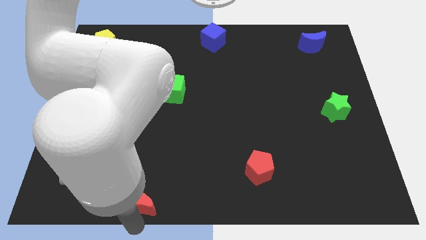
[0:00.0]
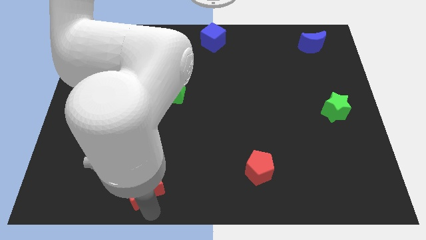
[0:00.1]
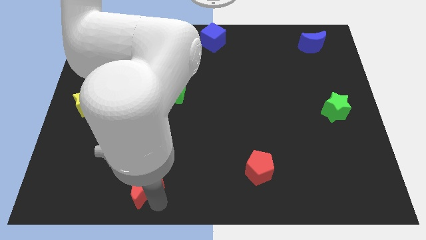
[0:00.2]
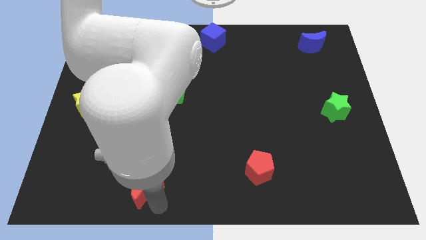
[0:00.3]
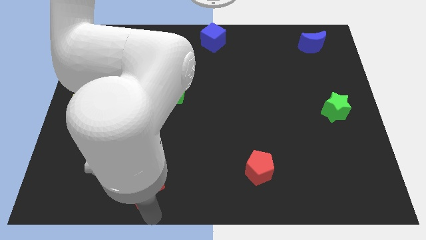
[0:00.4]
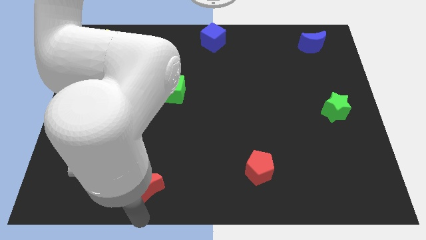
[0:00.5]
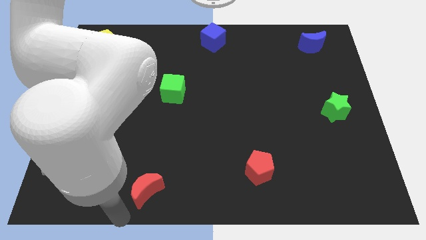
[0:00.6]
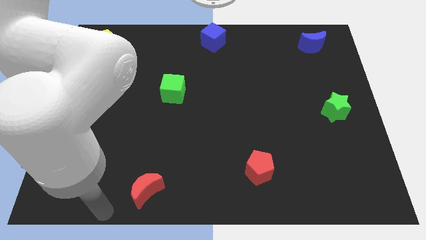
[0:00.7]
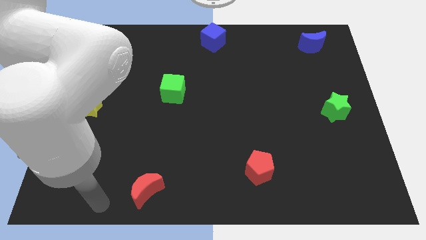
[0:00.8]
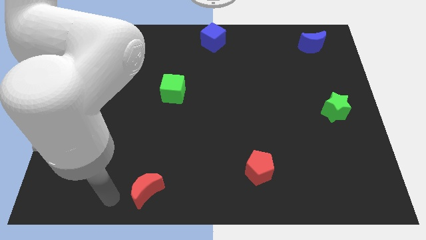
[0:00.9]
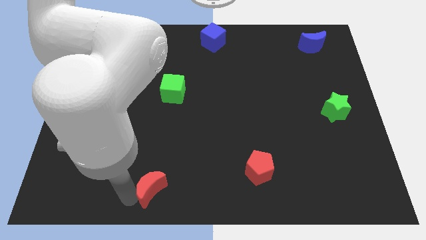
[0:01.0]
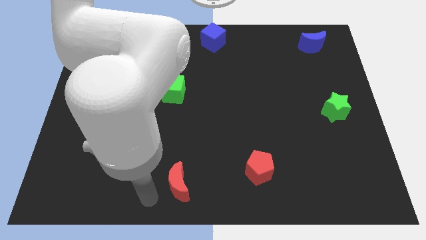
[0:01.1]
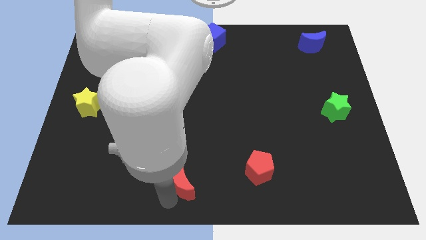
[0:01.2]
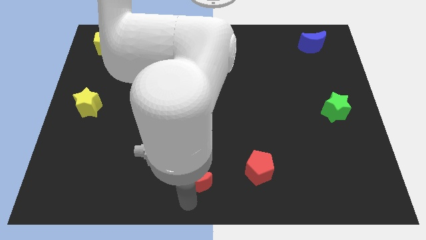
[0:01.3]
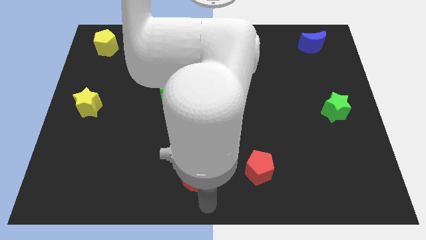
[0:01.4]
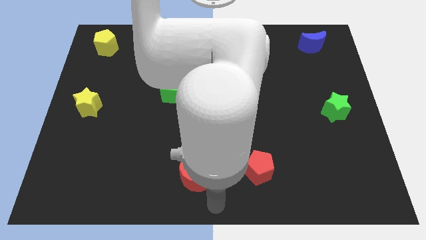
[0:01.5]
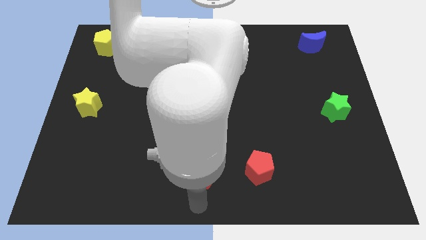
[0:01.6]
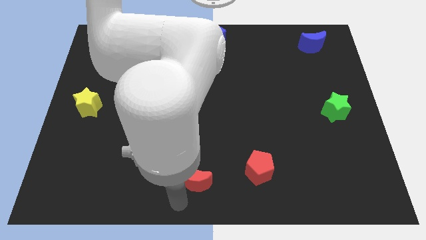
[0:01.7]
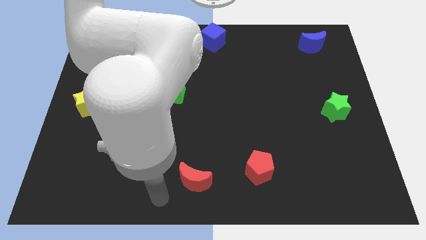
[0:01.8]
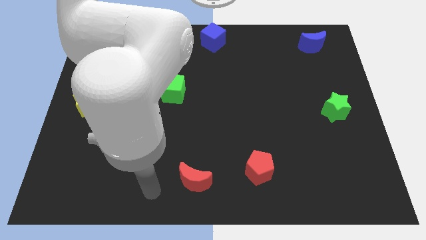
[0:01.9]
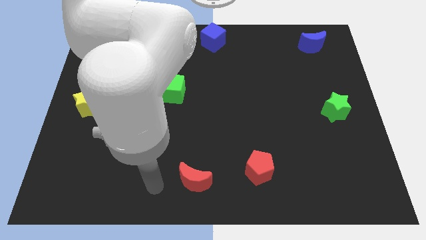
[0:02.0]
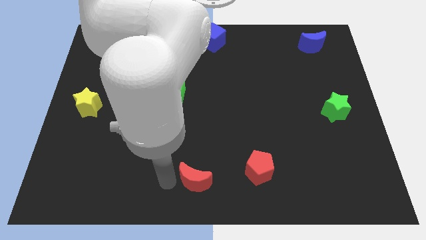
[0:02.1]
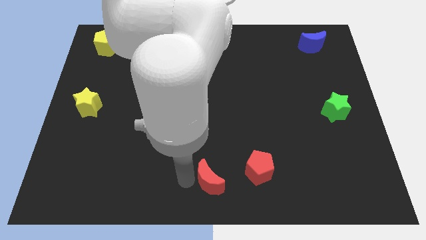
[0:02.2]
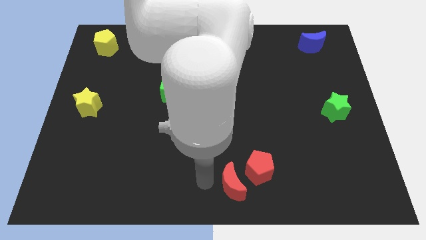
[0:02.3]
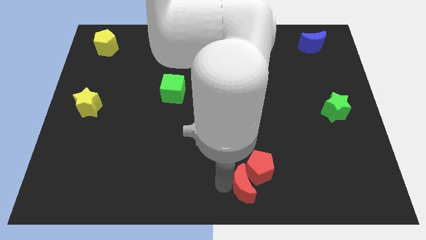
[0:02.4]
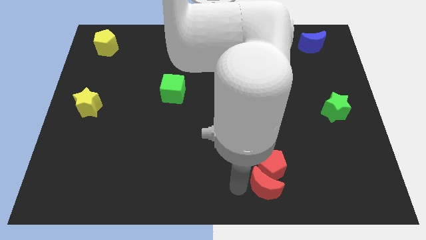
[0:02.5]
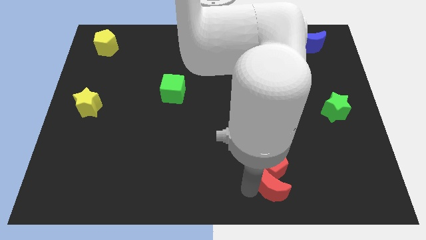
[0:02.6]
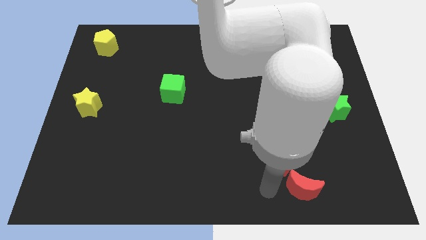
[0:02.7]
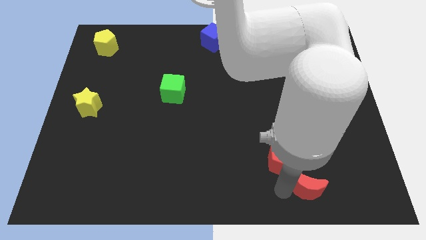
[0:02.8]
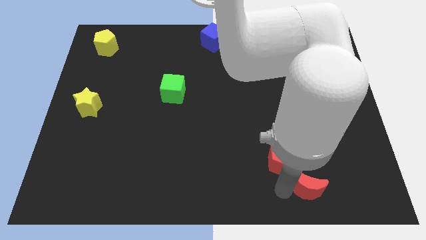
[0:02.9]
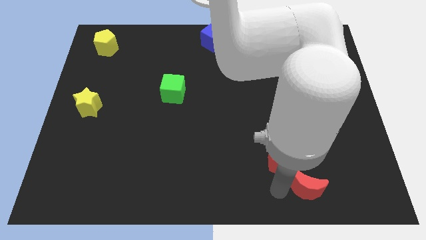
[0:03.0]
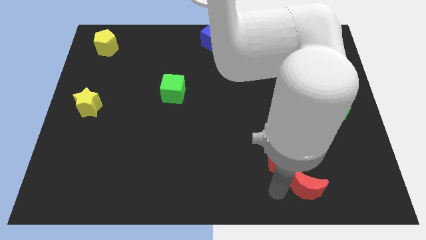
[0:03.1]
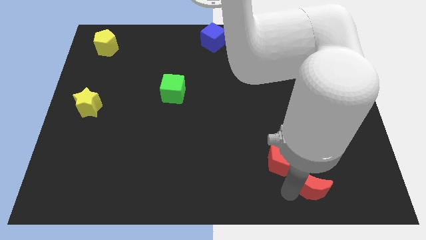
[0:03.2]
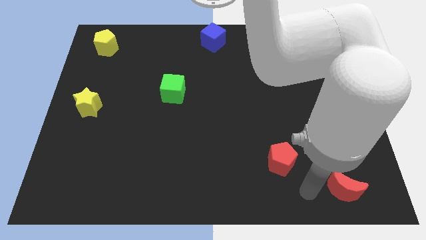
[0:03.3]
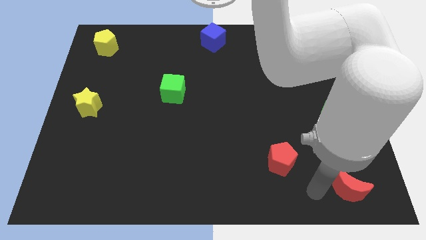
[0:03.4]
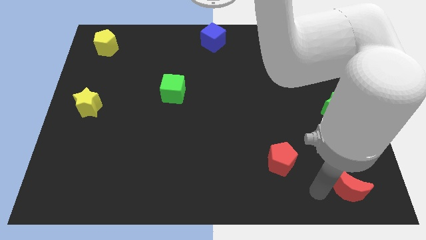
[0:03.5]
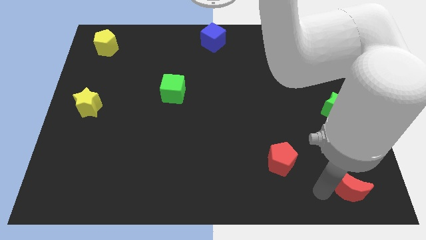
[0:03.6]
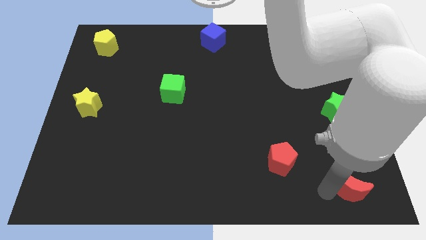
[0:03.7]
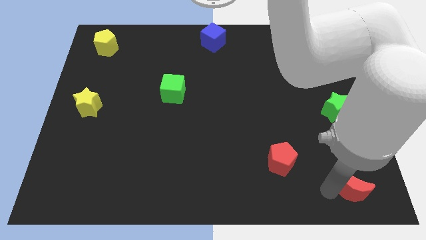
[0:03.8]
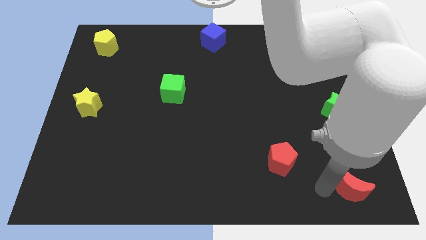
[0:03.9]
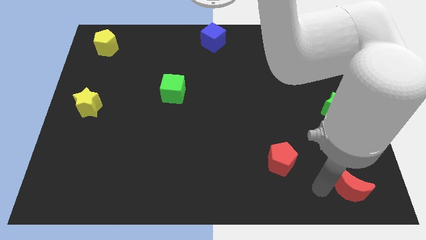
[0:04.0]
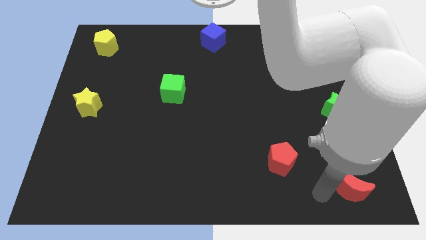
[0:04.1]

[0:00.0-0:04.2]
move red moon to the bottom right side of the board

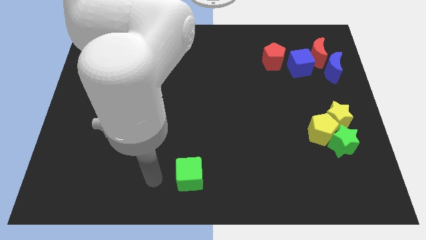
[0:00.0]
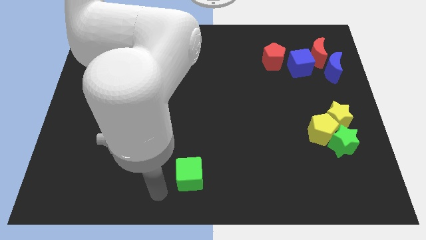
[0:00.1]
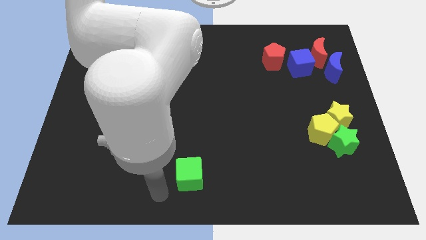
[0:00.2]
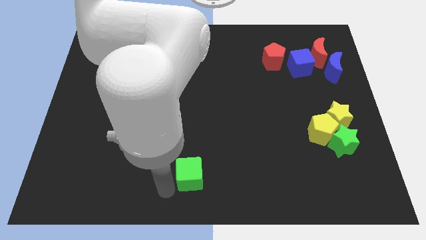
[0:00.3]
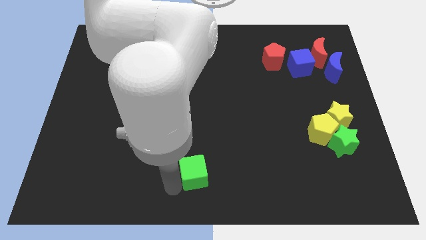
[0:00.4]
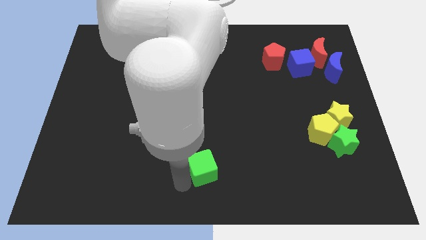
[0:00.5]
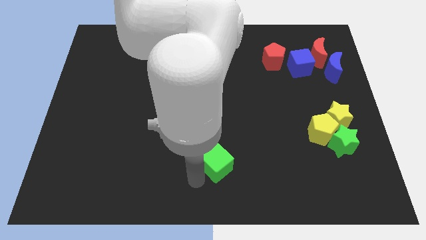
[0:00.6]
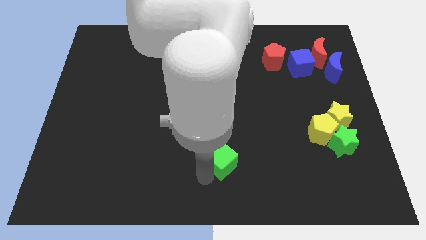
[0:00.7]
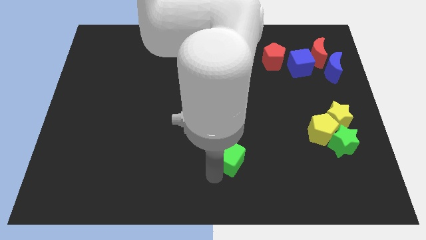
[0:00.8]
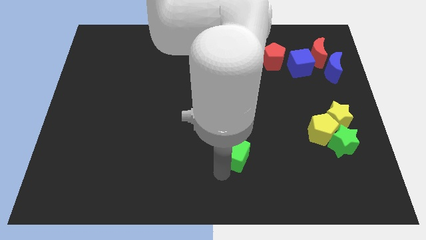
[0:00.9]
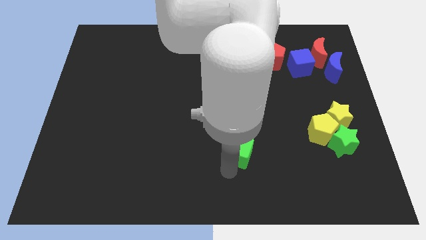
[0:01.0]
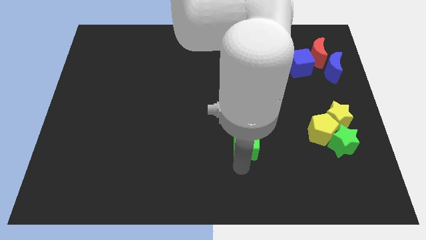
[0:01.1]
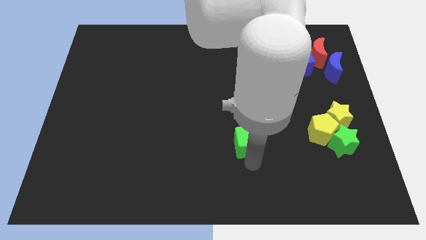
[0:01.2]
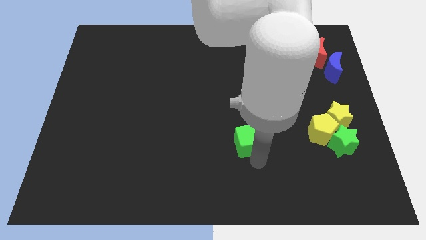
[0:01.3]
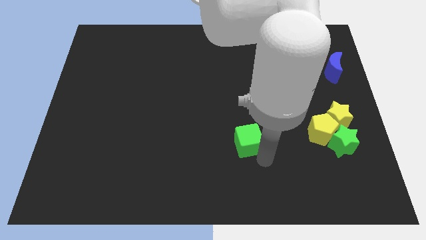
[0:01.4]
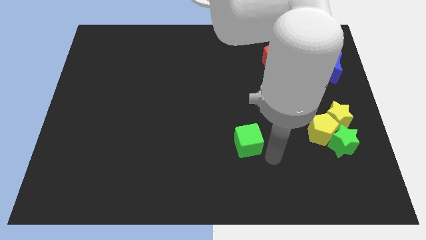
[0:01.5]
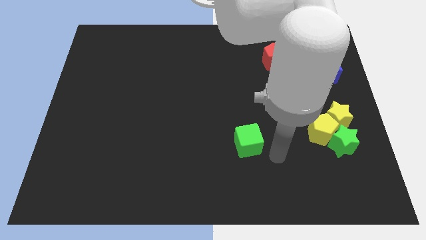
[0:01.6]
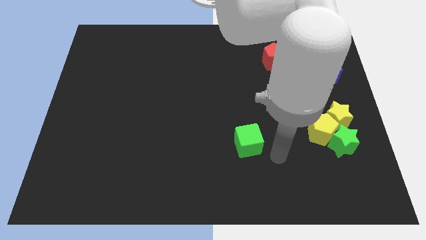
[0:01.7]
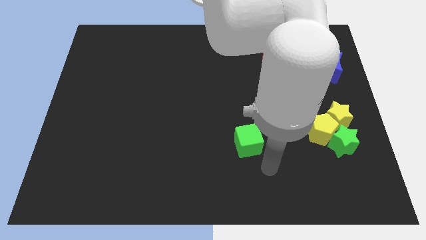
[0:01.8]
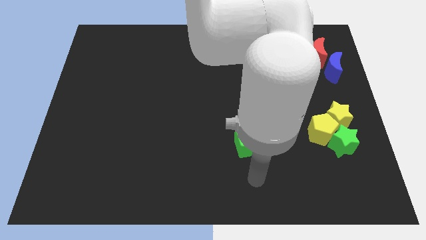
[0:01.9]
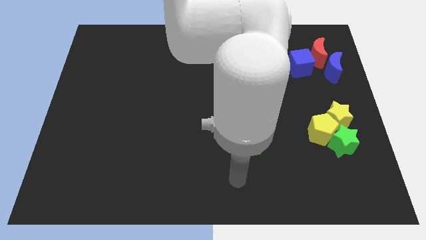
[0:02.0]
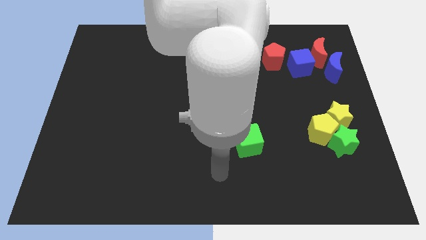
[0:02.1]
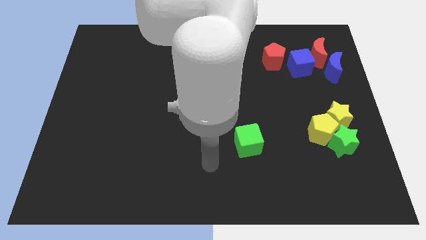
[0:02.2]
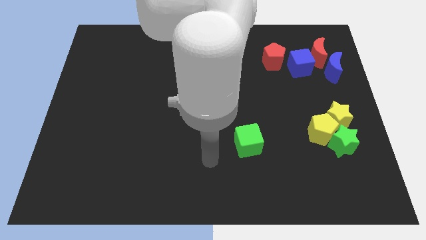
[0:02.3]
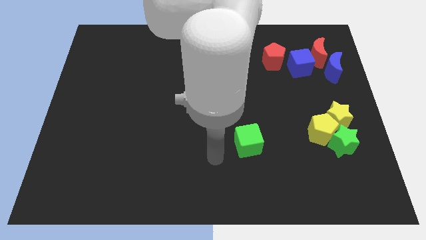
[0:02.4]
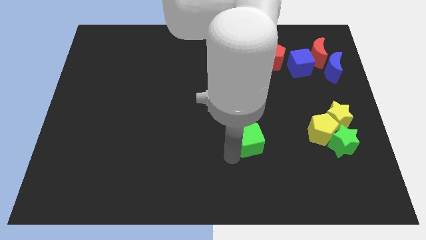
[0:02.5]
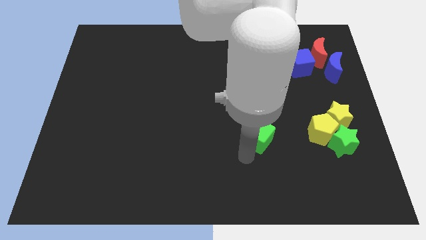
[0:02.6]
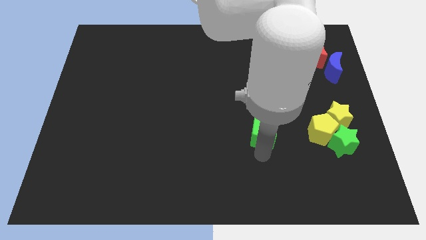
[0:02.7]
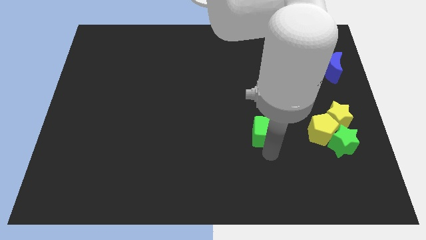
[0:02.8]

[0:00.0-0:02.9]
move green cube towards yellow pentagon

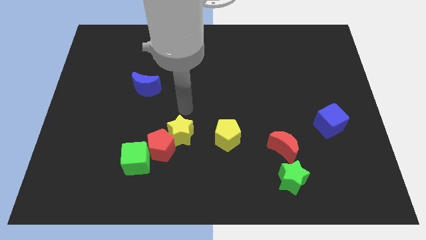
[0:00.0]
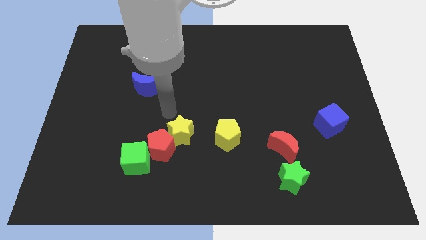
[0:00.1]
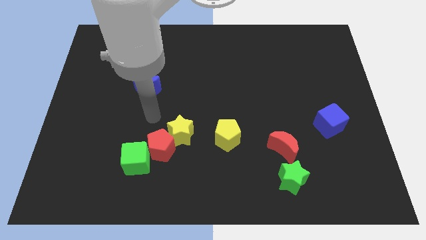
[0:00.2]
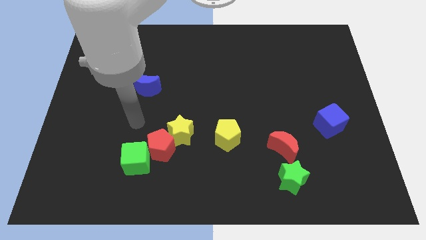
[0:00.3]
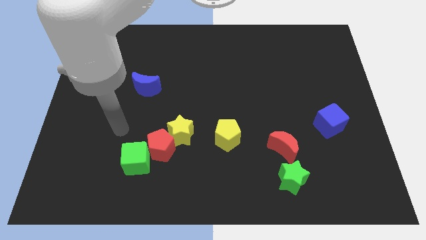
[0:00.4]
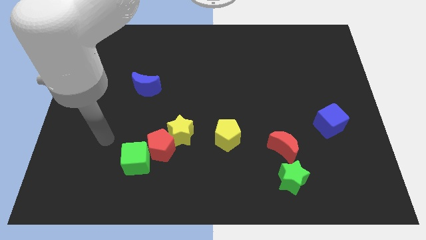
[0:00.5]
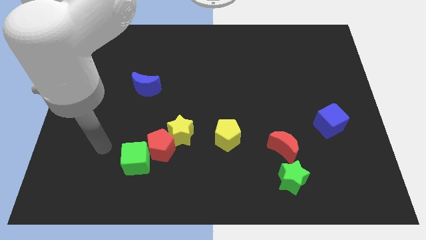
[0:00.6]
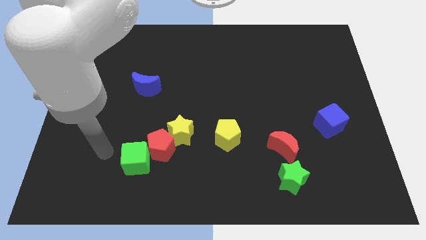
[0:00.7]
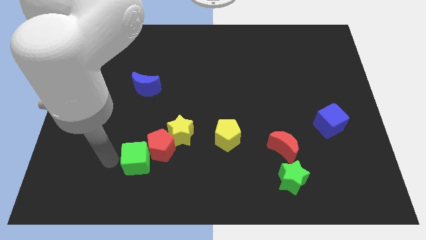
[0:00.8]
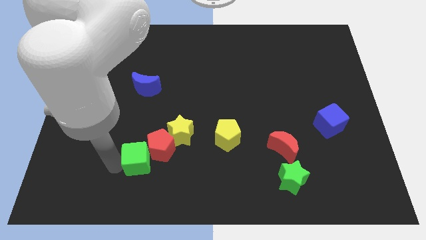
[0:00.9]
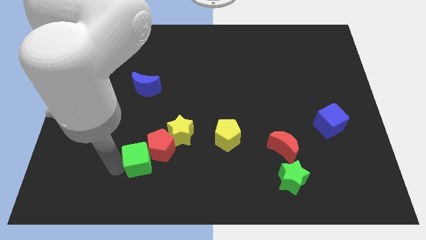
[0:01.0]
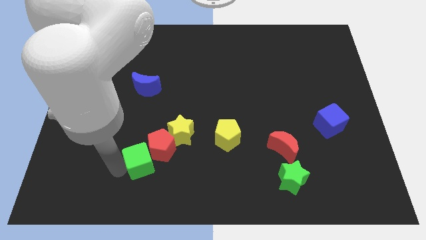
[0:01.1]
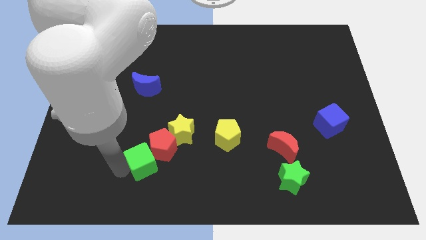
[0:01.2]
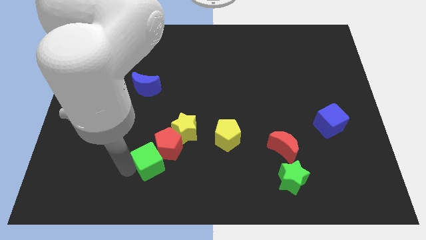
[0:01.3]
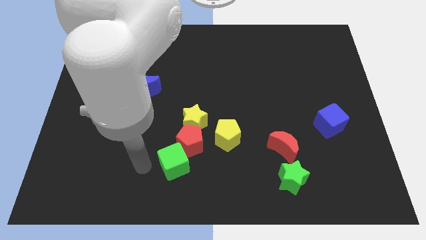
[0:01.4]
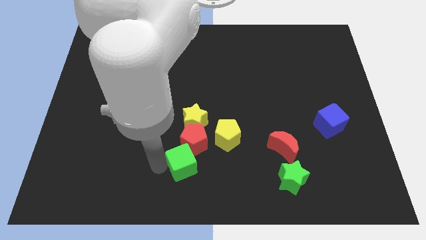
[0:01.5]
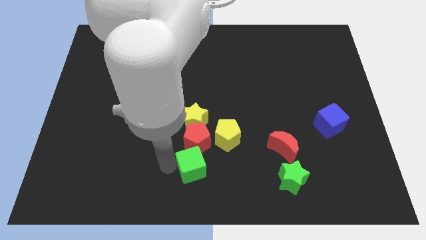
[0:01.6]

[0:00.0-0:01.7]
slide the green cube vertically below the red pentagon

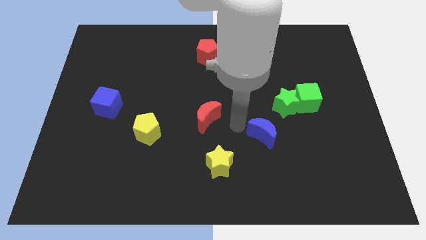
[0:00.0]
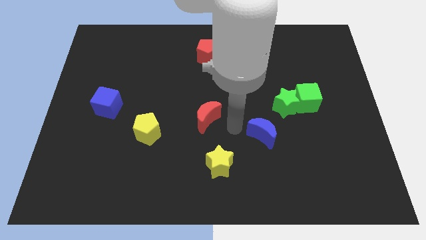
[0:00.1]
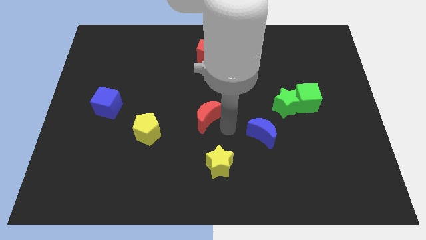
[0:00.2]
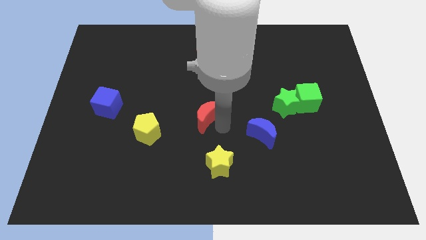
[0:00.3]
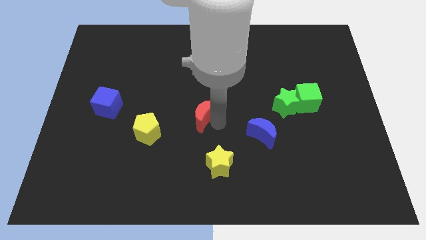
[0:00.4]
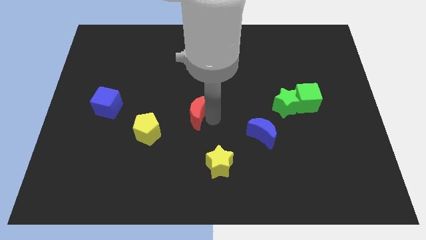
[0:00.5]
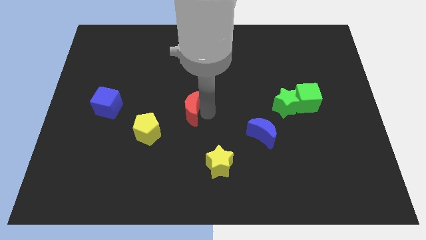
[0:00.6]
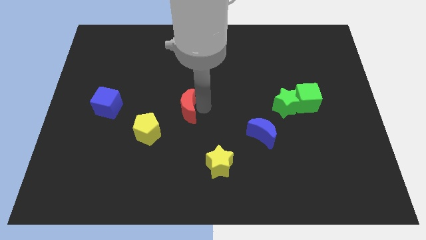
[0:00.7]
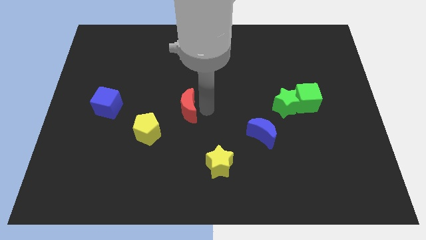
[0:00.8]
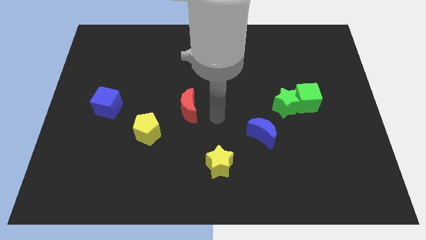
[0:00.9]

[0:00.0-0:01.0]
push the red crescent slightly to the left
